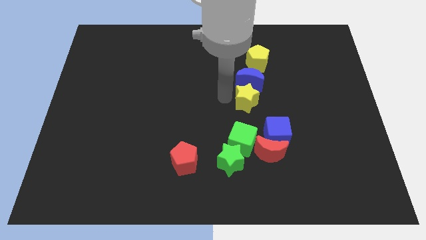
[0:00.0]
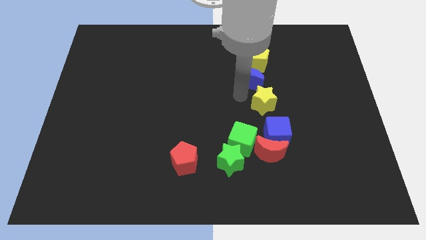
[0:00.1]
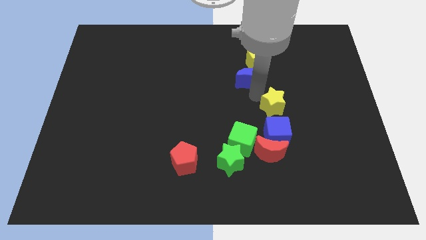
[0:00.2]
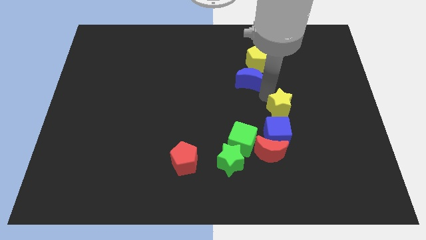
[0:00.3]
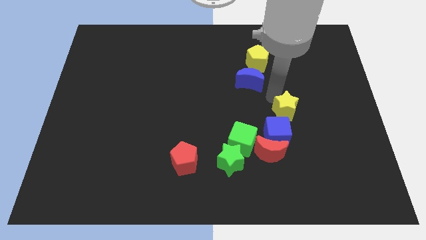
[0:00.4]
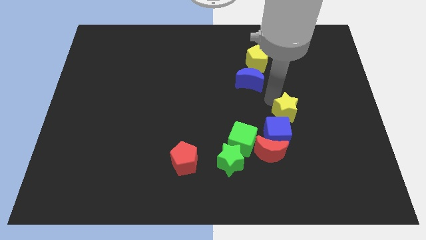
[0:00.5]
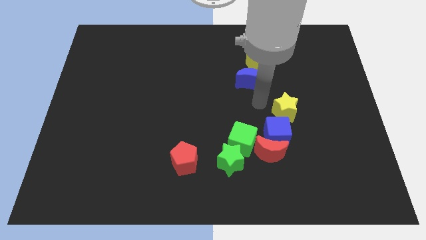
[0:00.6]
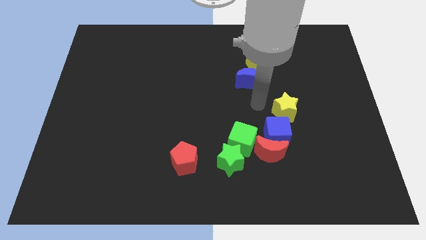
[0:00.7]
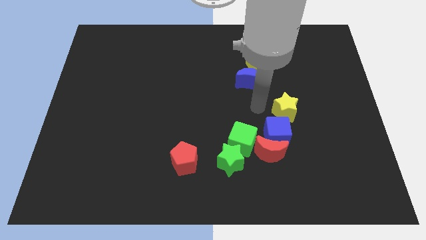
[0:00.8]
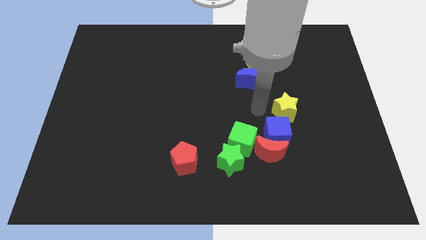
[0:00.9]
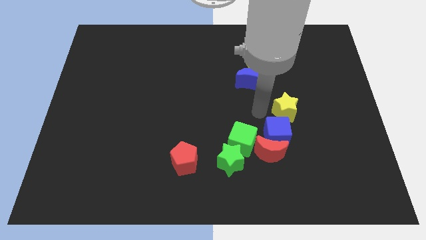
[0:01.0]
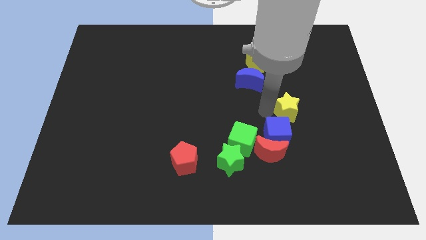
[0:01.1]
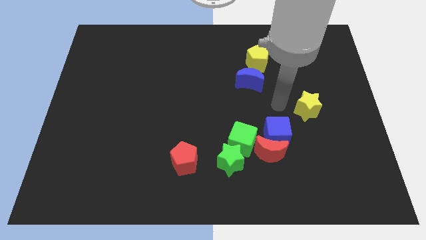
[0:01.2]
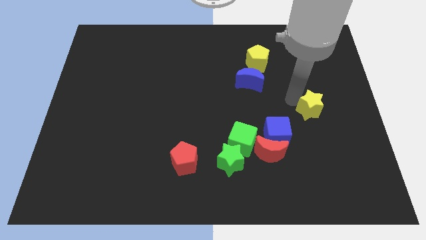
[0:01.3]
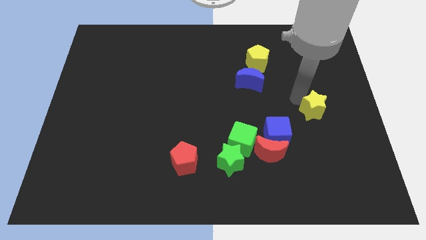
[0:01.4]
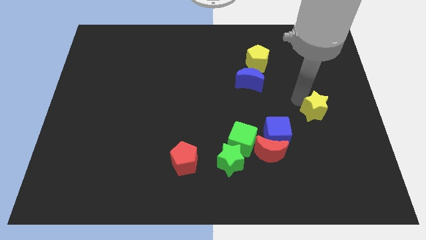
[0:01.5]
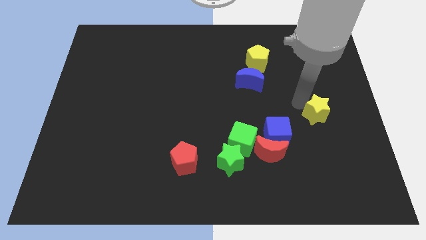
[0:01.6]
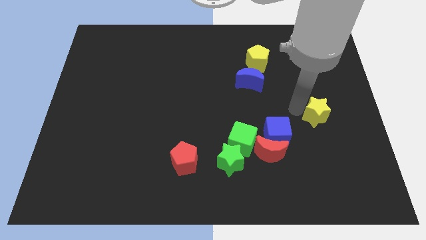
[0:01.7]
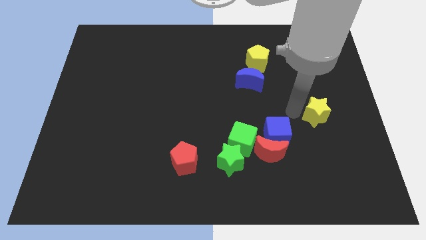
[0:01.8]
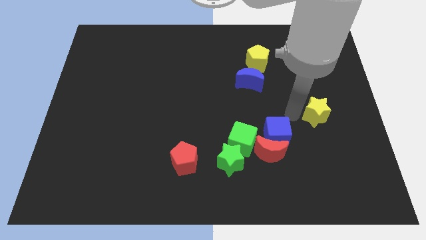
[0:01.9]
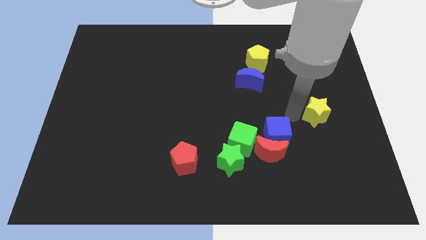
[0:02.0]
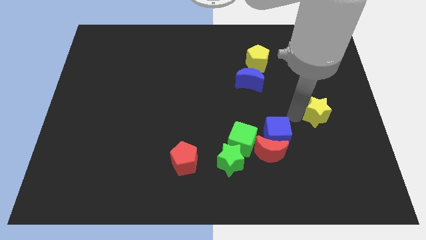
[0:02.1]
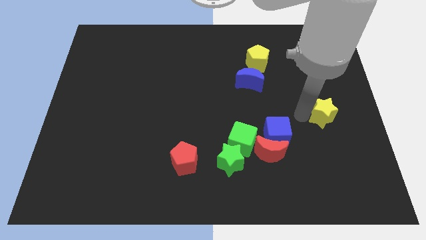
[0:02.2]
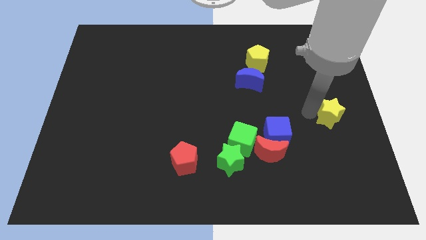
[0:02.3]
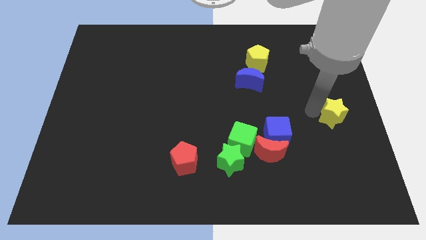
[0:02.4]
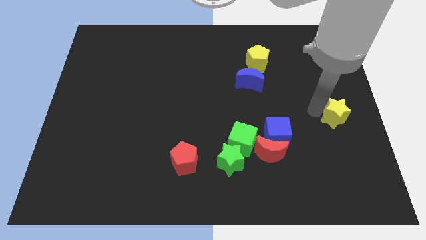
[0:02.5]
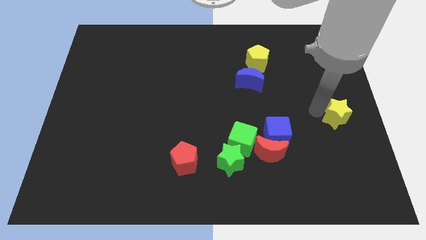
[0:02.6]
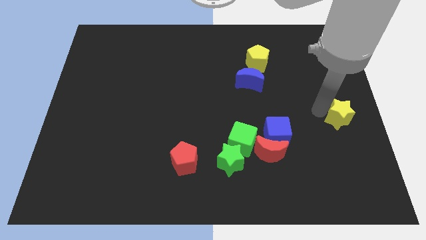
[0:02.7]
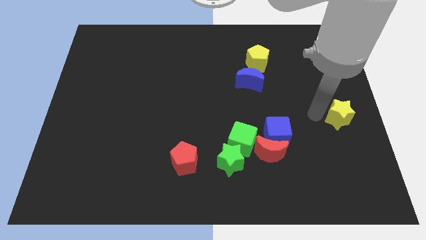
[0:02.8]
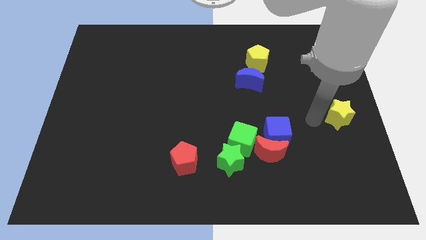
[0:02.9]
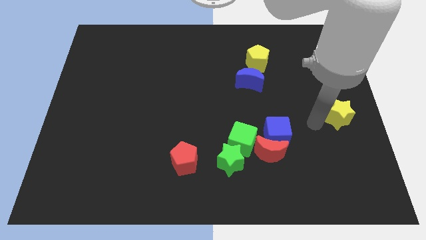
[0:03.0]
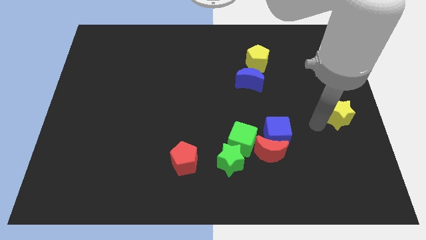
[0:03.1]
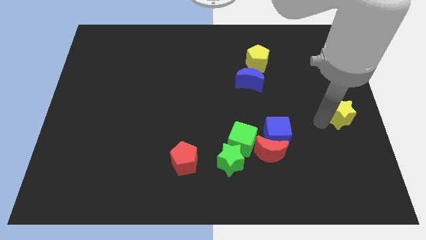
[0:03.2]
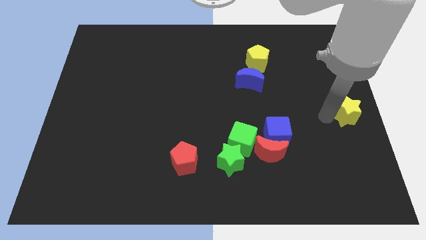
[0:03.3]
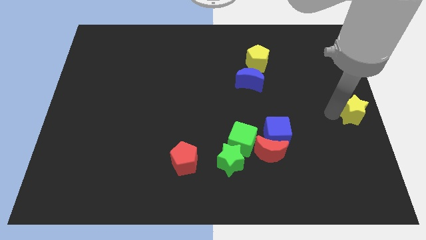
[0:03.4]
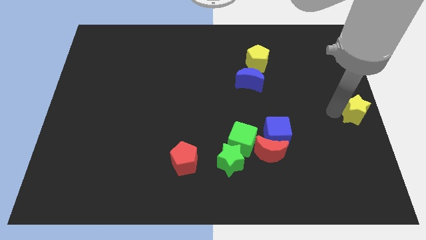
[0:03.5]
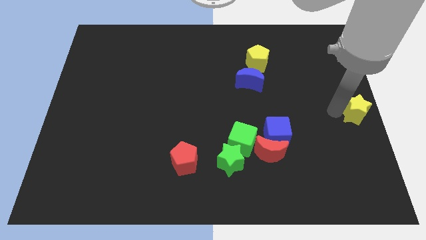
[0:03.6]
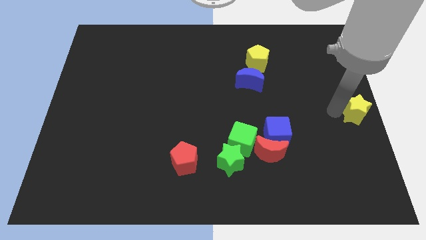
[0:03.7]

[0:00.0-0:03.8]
drag the yellow star to the center right of the table

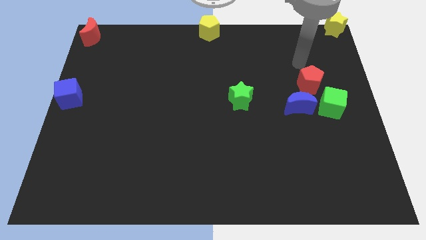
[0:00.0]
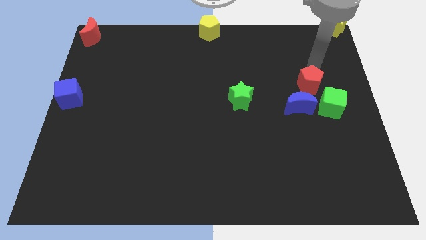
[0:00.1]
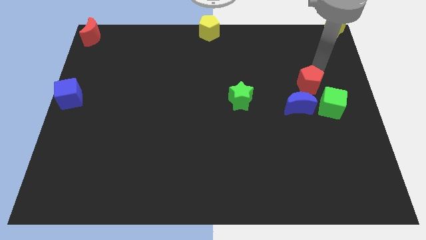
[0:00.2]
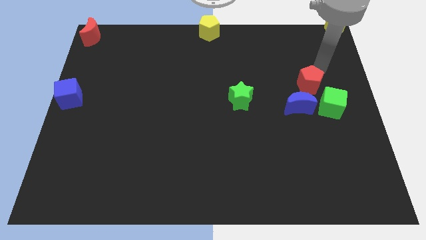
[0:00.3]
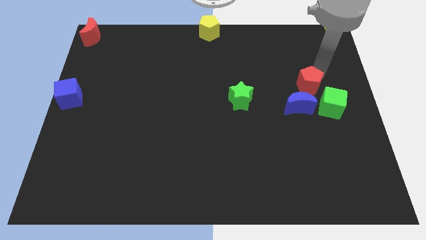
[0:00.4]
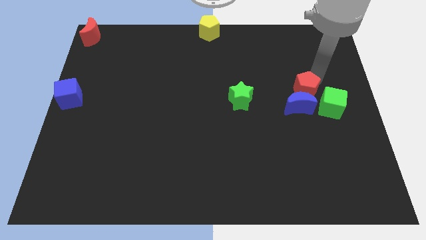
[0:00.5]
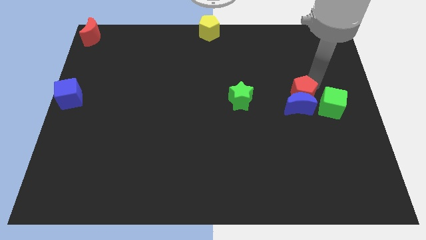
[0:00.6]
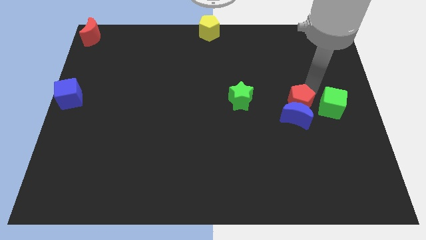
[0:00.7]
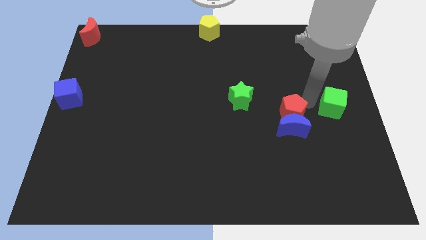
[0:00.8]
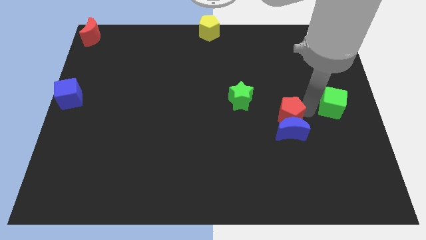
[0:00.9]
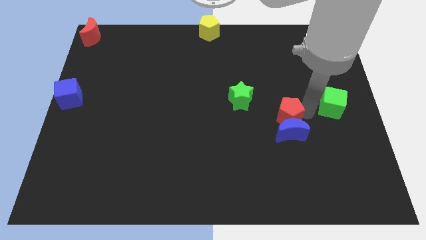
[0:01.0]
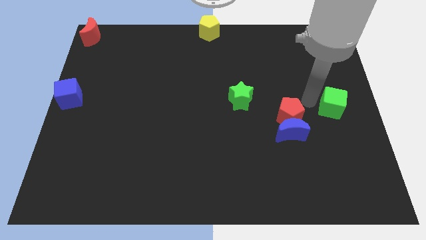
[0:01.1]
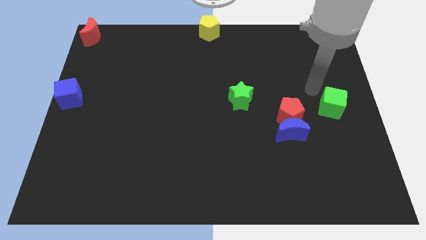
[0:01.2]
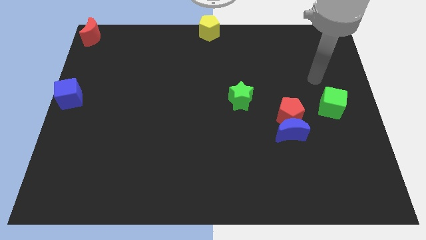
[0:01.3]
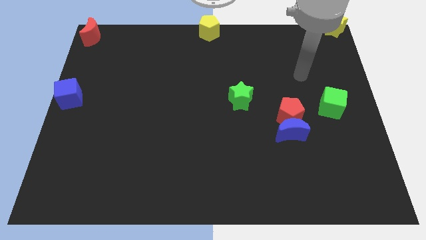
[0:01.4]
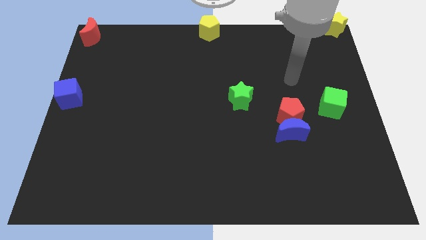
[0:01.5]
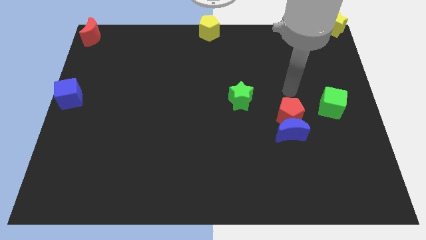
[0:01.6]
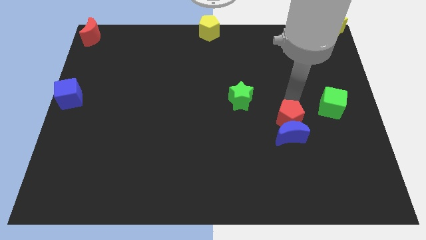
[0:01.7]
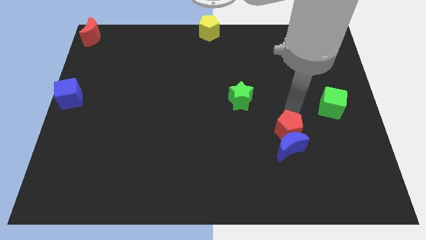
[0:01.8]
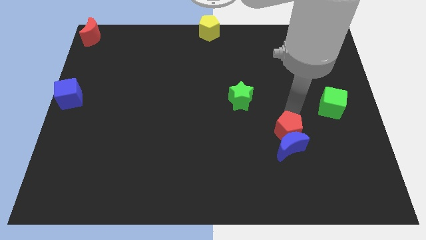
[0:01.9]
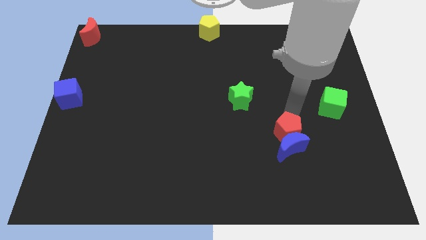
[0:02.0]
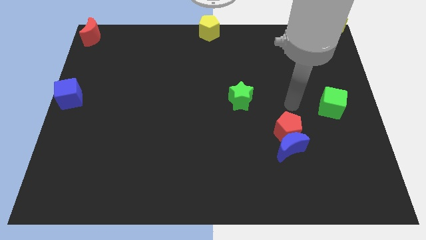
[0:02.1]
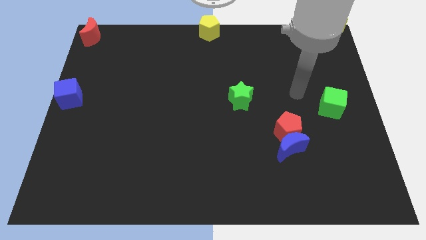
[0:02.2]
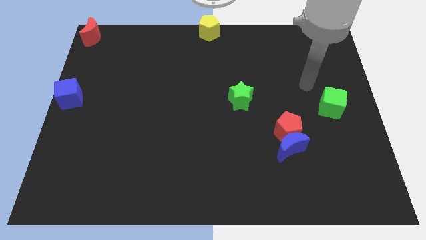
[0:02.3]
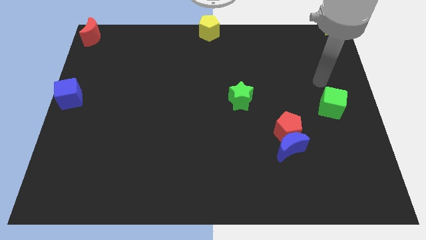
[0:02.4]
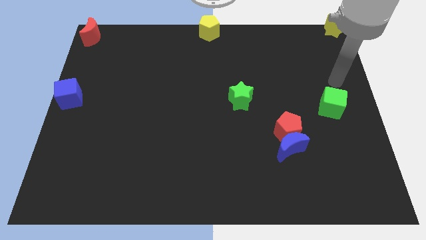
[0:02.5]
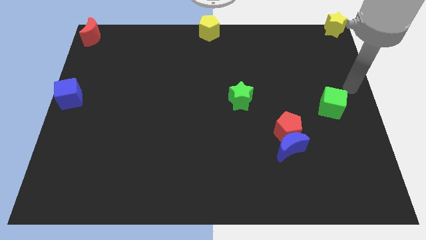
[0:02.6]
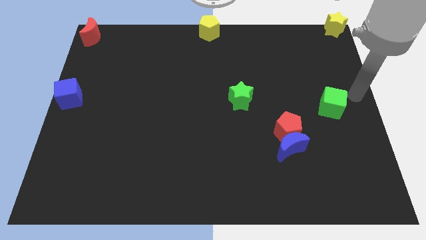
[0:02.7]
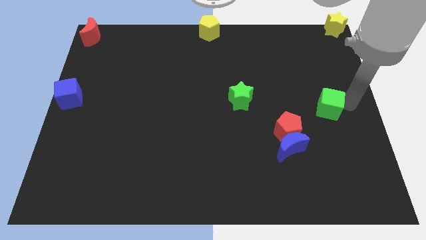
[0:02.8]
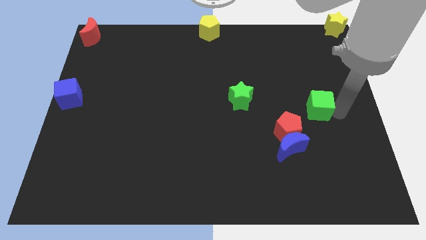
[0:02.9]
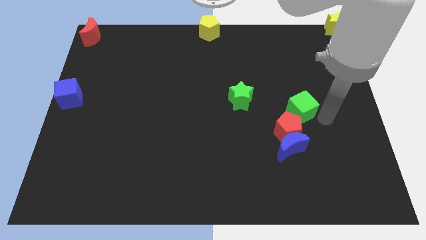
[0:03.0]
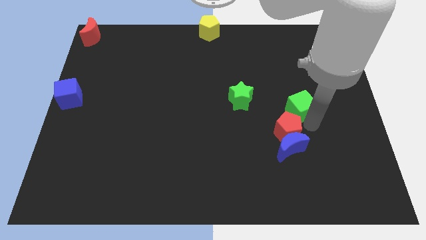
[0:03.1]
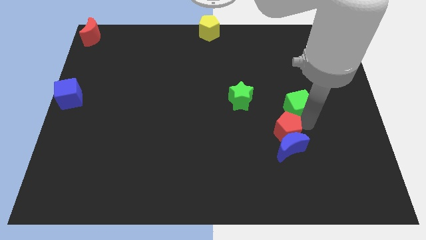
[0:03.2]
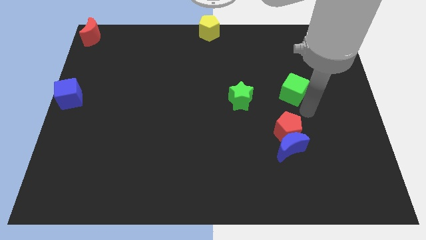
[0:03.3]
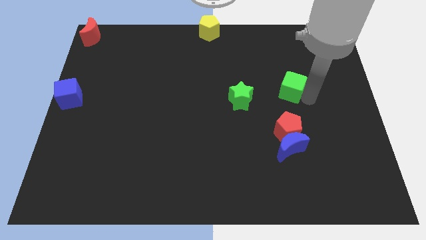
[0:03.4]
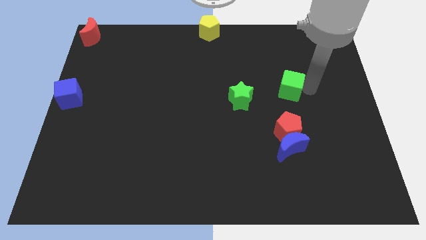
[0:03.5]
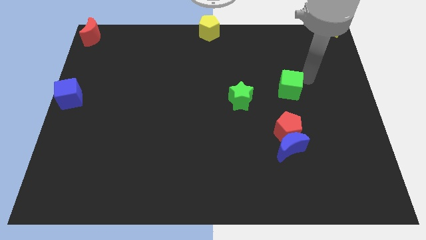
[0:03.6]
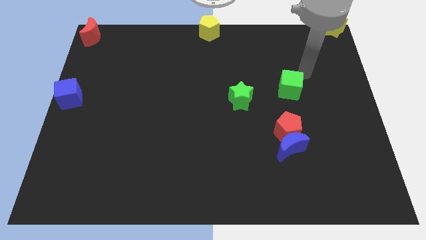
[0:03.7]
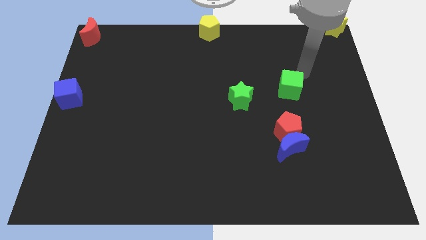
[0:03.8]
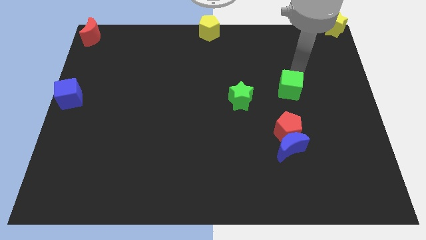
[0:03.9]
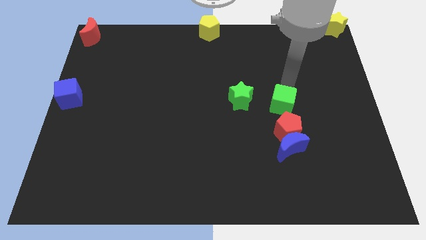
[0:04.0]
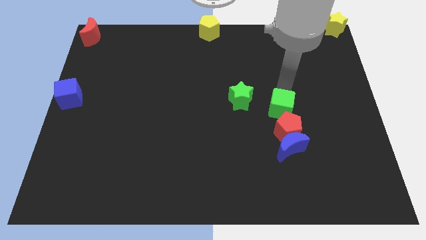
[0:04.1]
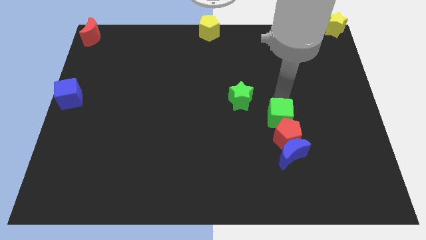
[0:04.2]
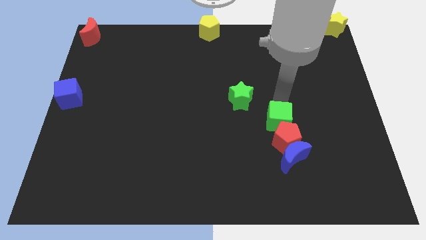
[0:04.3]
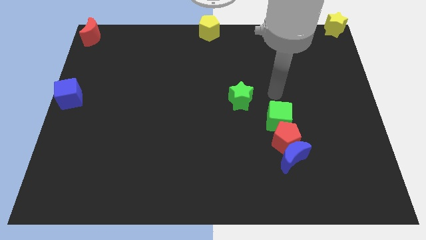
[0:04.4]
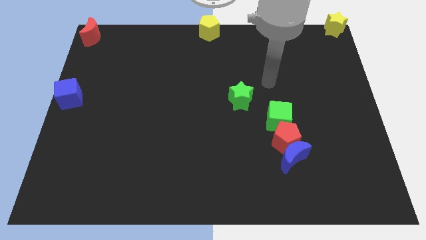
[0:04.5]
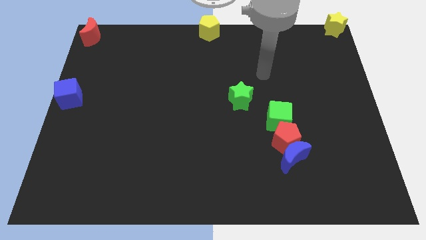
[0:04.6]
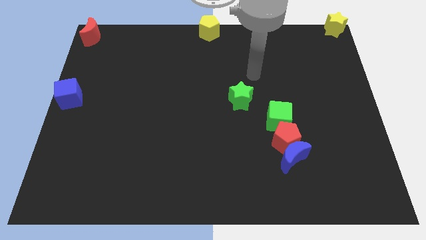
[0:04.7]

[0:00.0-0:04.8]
push group of objects to the bottom of the board

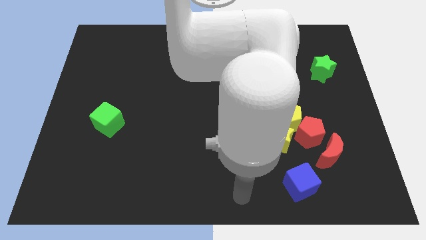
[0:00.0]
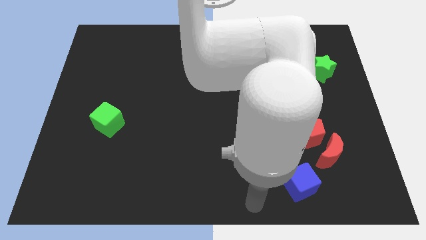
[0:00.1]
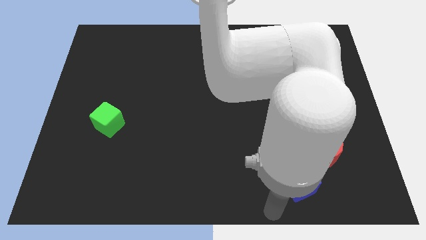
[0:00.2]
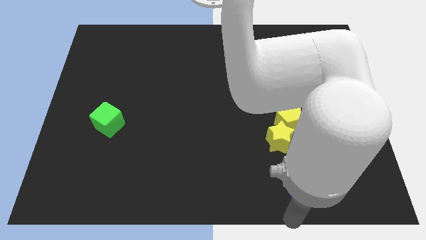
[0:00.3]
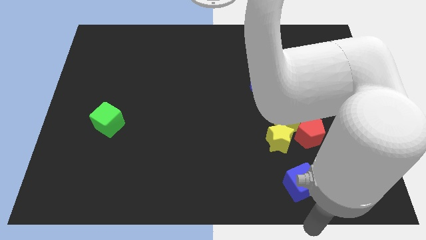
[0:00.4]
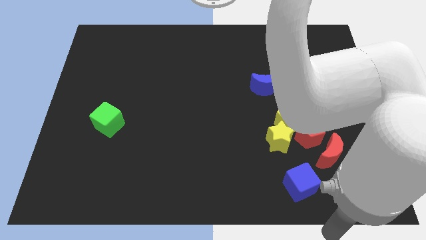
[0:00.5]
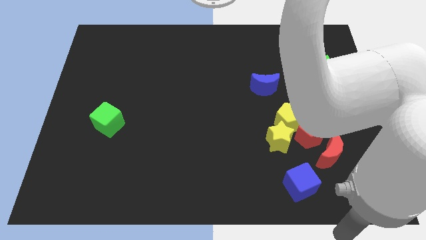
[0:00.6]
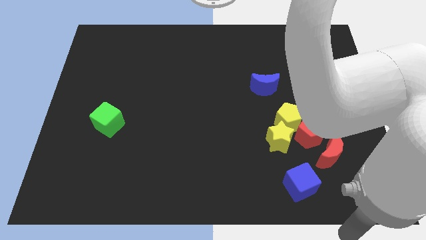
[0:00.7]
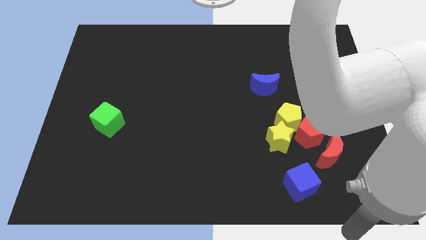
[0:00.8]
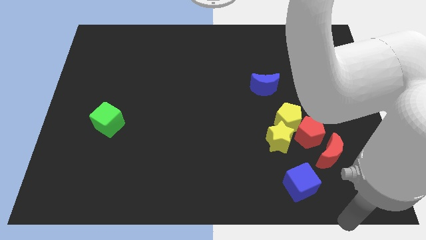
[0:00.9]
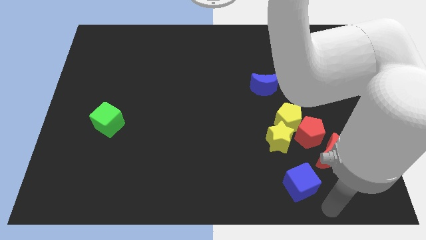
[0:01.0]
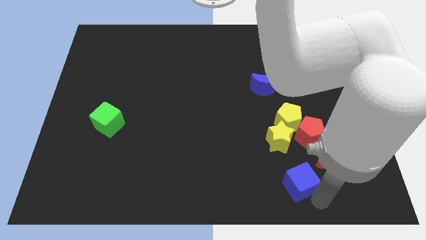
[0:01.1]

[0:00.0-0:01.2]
touch the bottom of blue cube
